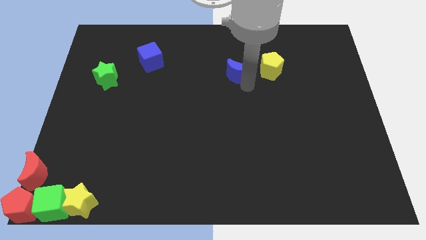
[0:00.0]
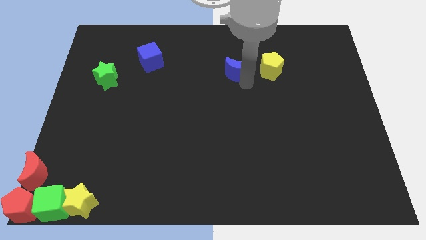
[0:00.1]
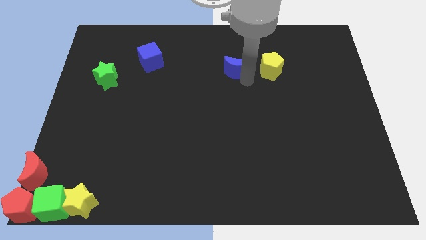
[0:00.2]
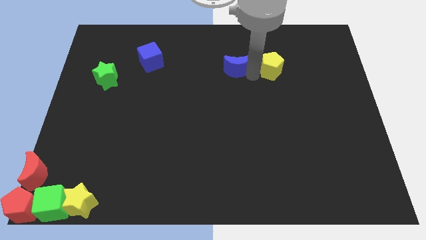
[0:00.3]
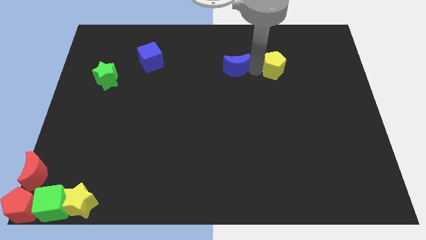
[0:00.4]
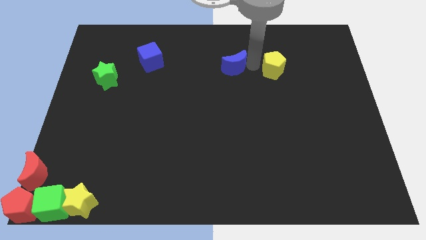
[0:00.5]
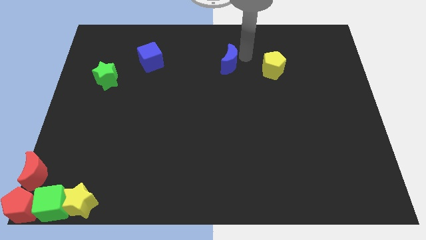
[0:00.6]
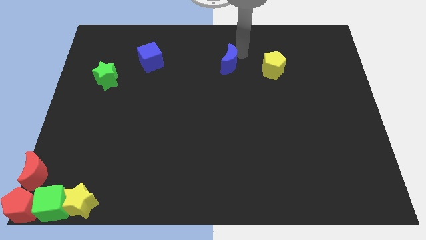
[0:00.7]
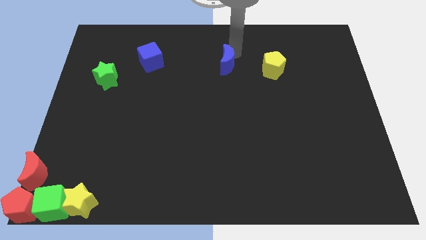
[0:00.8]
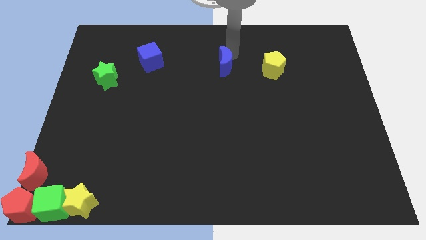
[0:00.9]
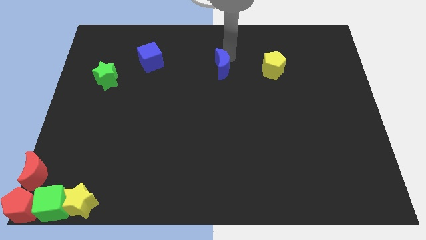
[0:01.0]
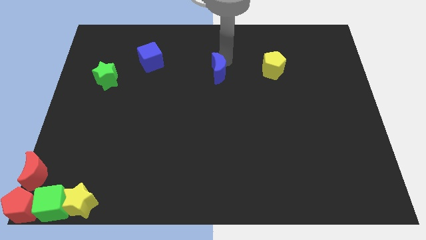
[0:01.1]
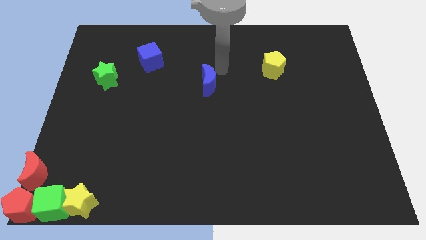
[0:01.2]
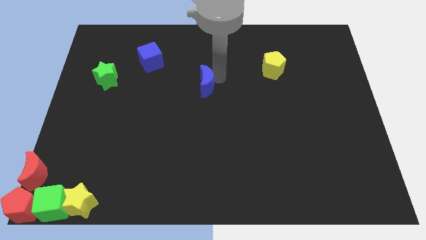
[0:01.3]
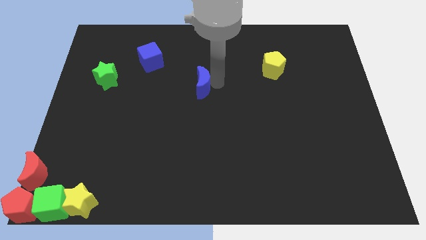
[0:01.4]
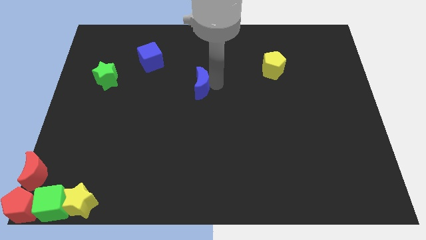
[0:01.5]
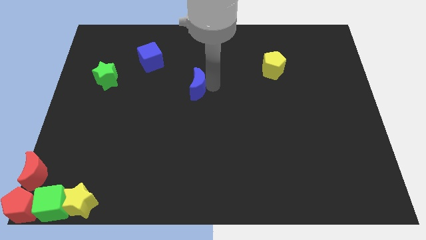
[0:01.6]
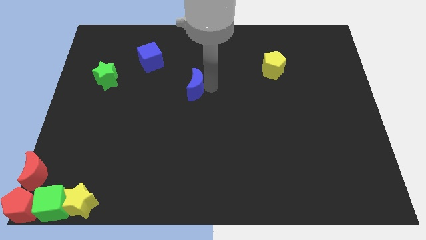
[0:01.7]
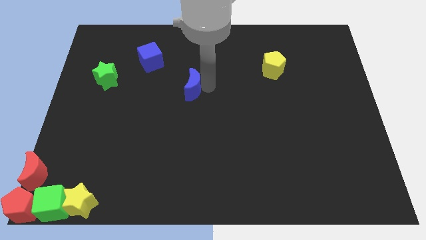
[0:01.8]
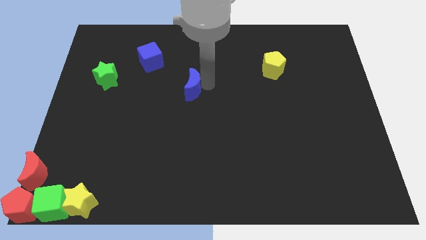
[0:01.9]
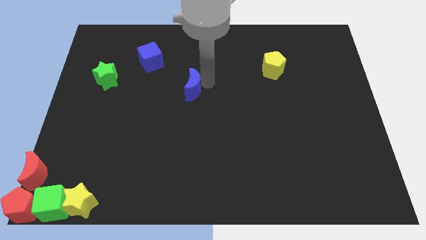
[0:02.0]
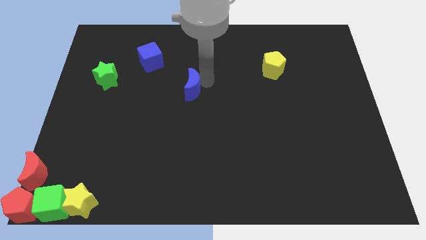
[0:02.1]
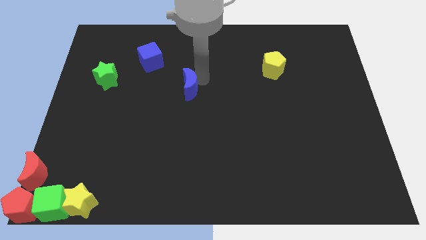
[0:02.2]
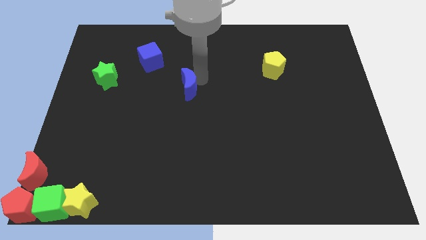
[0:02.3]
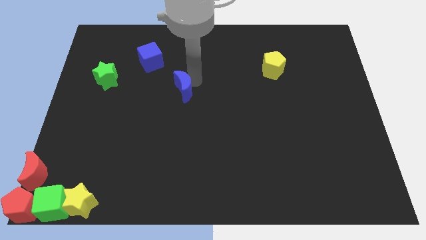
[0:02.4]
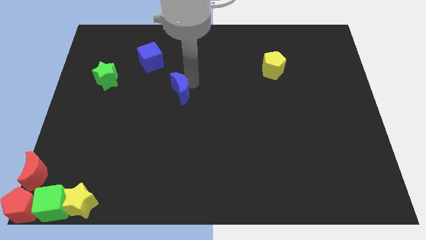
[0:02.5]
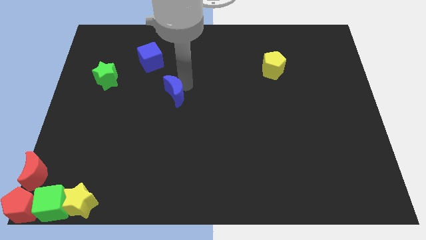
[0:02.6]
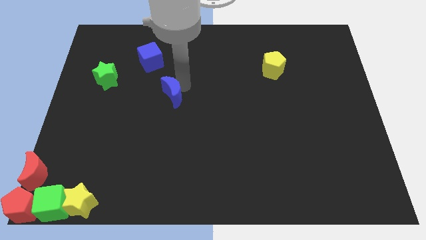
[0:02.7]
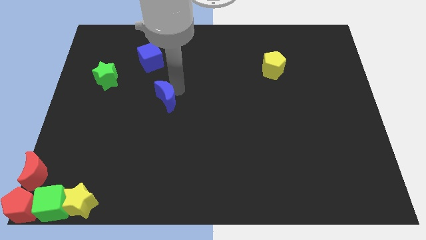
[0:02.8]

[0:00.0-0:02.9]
place the blue moon below the blue cube

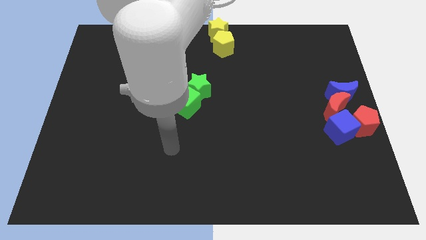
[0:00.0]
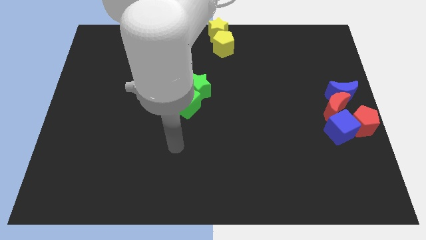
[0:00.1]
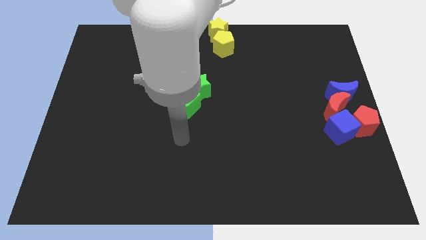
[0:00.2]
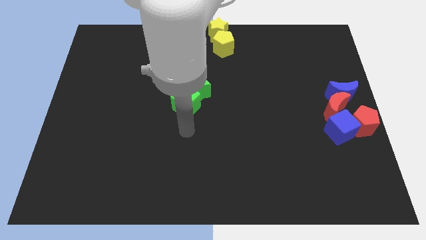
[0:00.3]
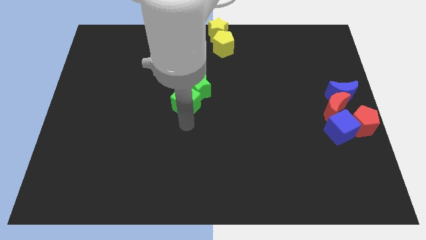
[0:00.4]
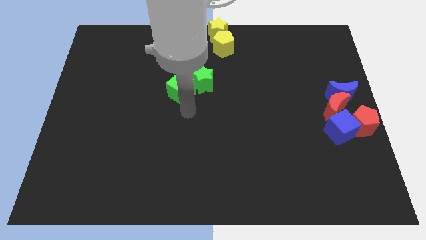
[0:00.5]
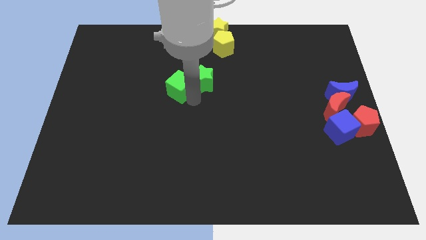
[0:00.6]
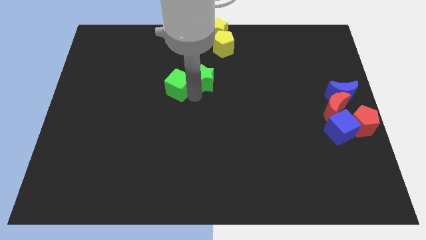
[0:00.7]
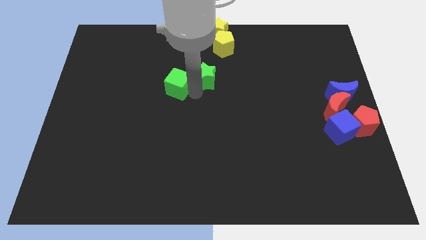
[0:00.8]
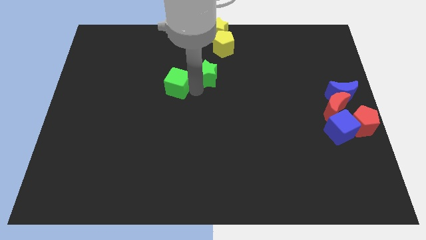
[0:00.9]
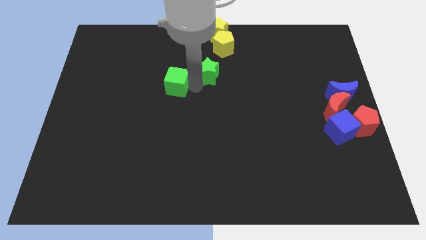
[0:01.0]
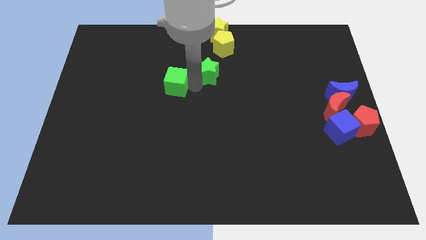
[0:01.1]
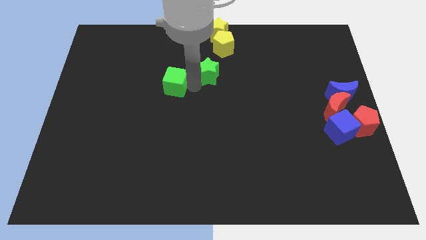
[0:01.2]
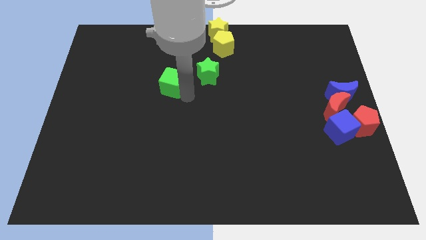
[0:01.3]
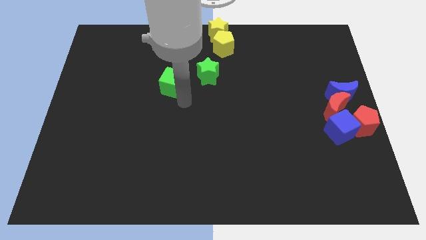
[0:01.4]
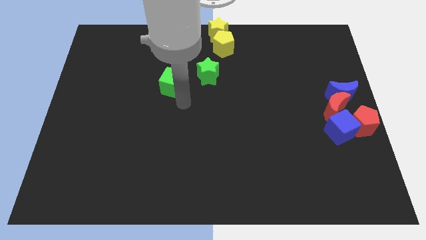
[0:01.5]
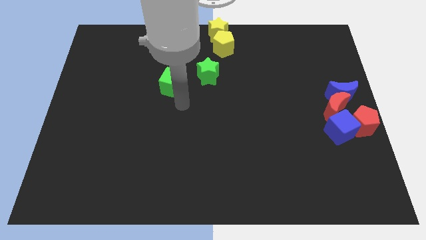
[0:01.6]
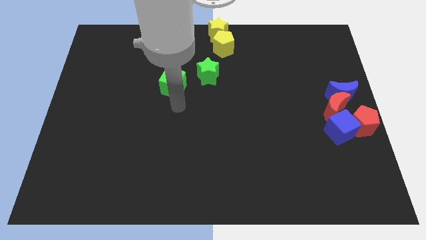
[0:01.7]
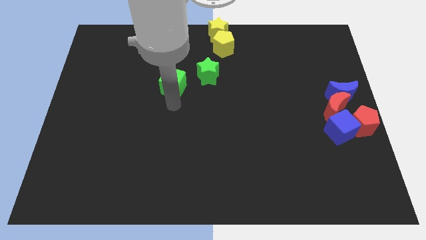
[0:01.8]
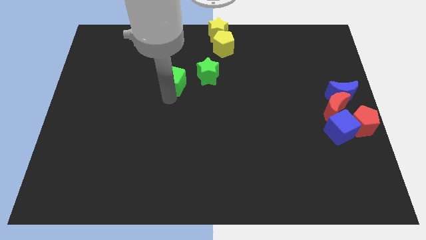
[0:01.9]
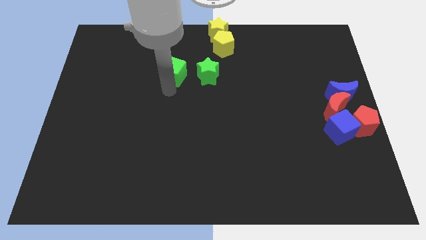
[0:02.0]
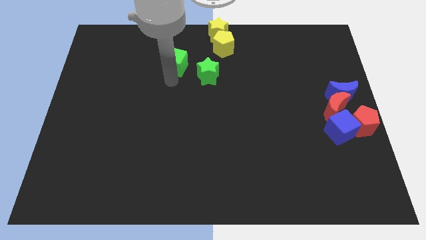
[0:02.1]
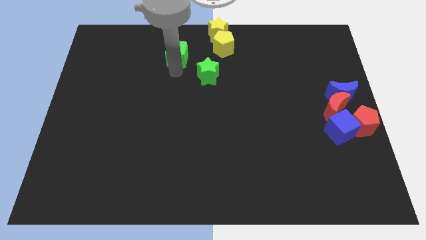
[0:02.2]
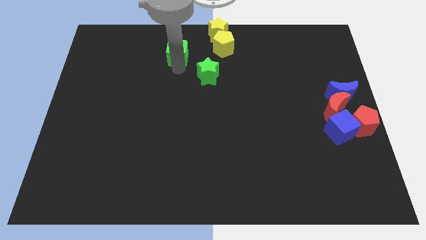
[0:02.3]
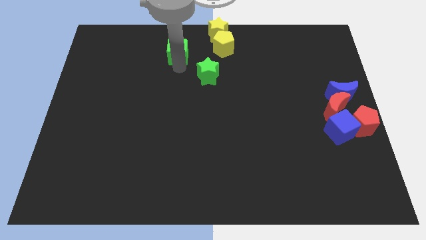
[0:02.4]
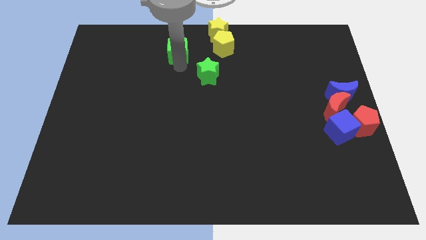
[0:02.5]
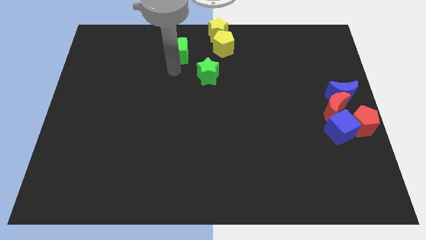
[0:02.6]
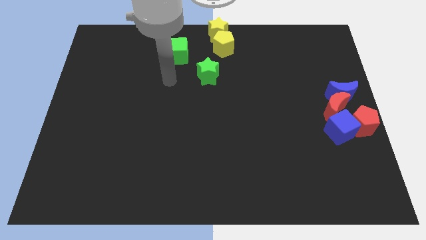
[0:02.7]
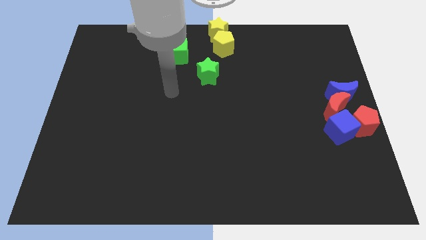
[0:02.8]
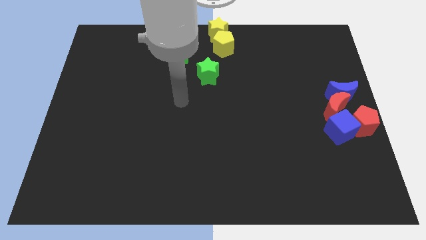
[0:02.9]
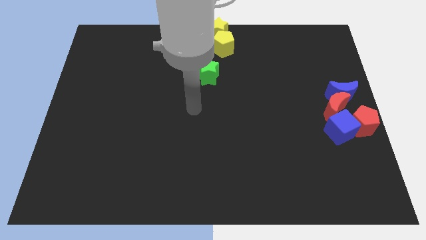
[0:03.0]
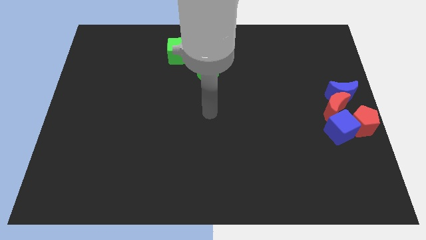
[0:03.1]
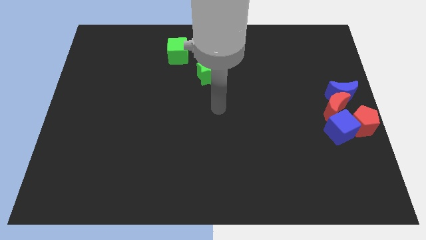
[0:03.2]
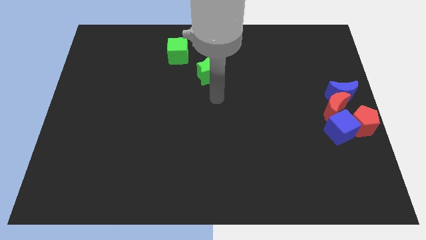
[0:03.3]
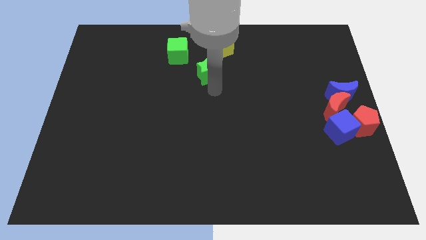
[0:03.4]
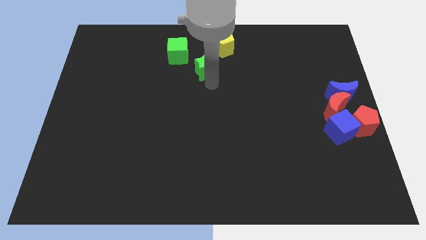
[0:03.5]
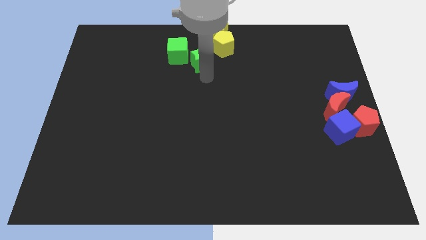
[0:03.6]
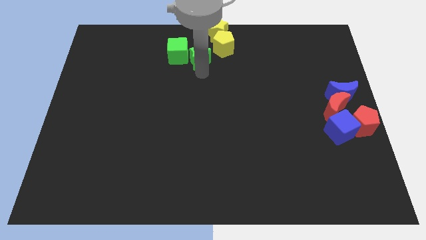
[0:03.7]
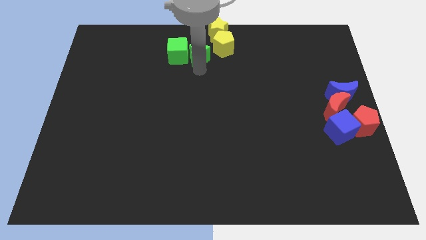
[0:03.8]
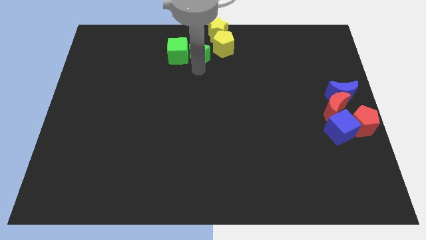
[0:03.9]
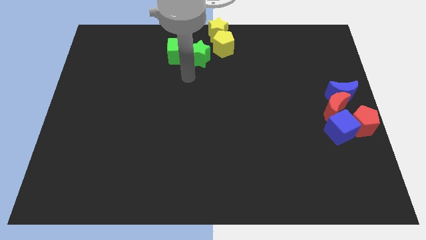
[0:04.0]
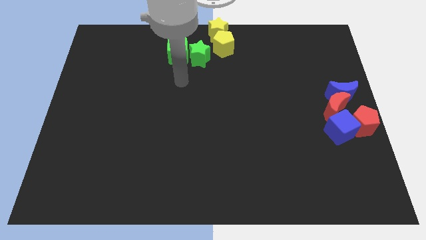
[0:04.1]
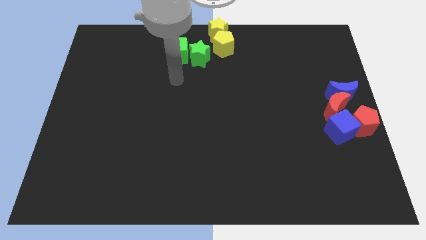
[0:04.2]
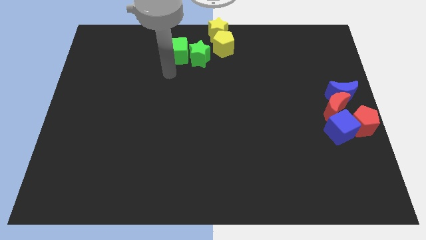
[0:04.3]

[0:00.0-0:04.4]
push the green blocks to the left of the yellow pentagon

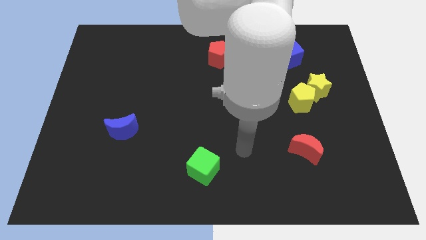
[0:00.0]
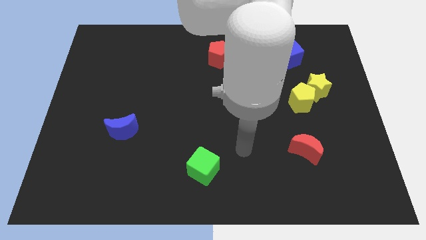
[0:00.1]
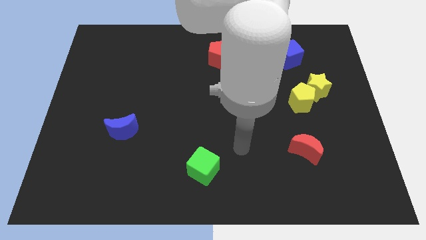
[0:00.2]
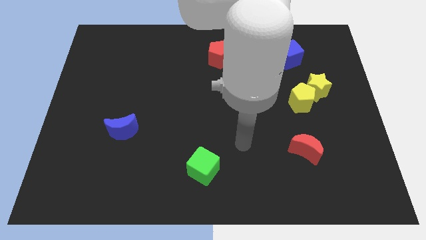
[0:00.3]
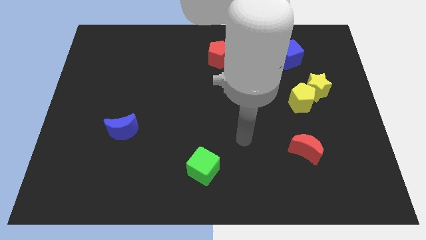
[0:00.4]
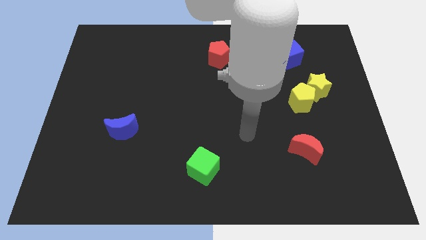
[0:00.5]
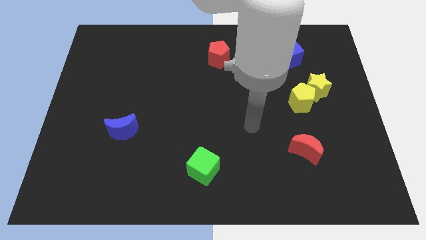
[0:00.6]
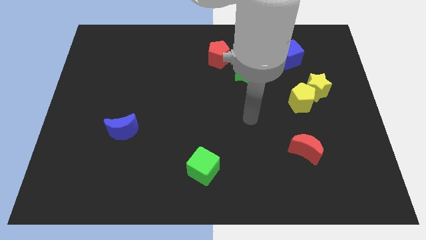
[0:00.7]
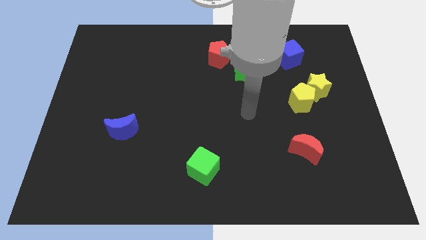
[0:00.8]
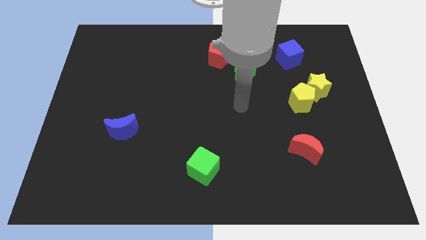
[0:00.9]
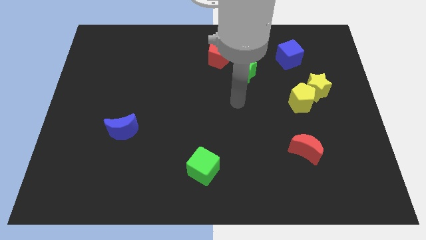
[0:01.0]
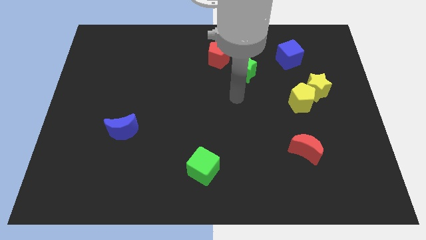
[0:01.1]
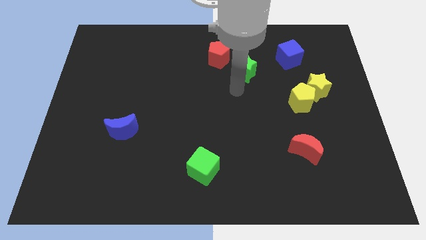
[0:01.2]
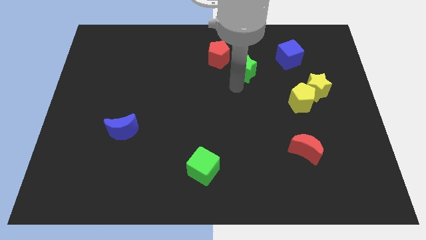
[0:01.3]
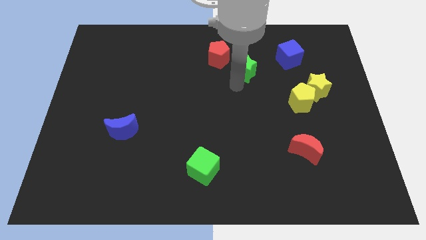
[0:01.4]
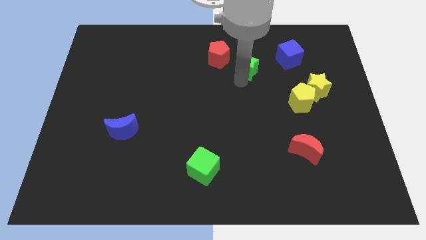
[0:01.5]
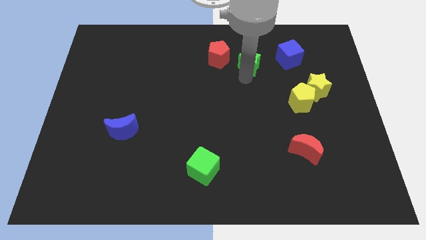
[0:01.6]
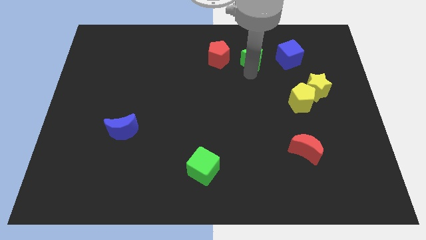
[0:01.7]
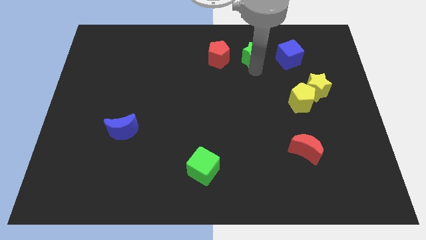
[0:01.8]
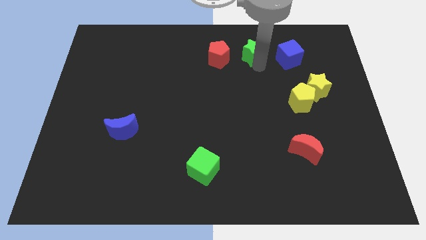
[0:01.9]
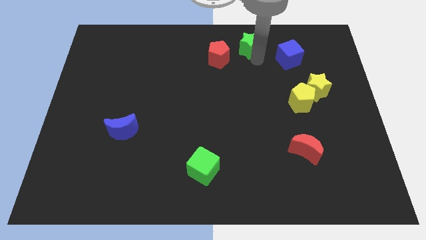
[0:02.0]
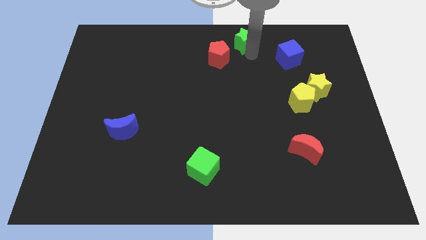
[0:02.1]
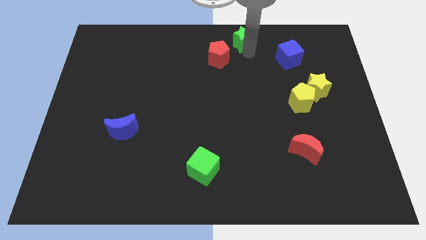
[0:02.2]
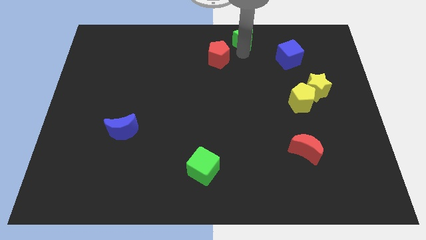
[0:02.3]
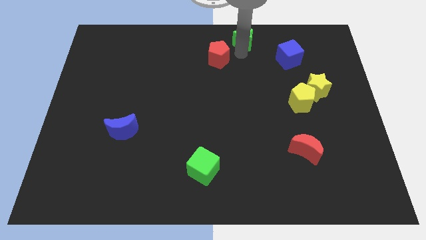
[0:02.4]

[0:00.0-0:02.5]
move the green star towards the top center of the board
